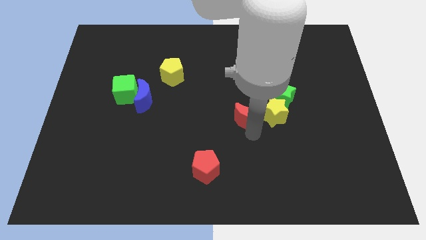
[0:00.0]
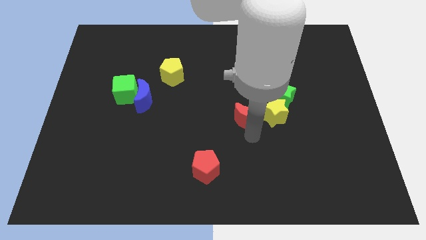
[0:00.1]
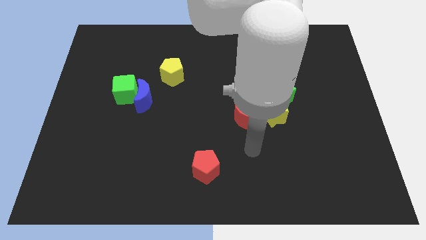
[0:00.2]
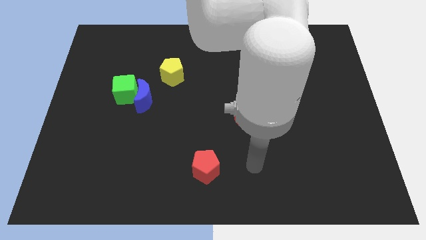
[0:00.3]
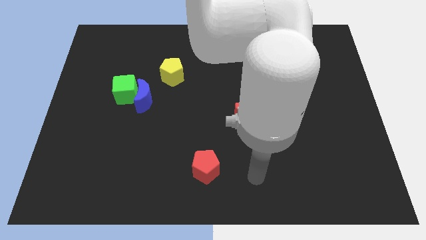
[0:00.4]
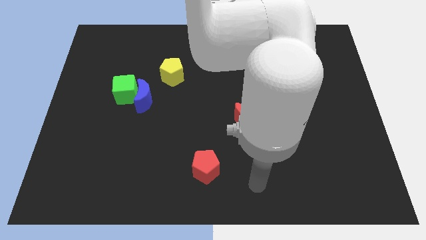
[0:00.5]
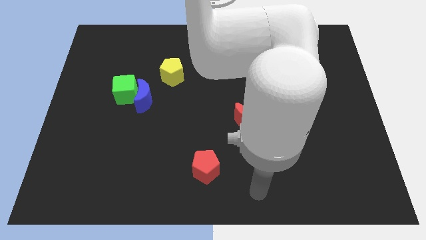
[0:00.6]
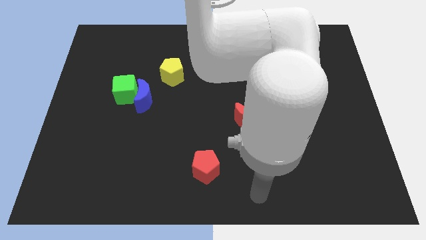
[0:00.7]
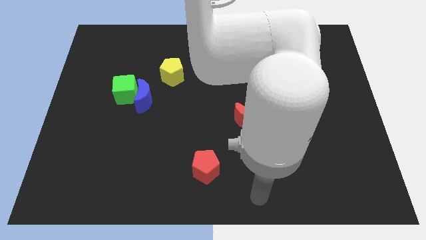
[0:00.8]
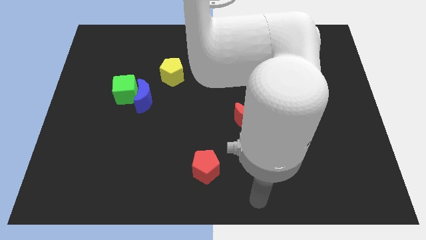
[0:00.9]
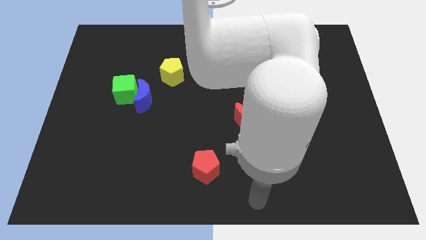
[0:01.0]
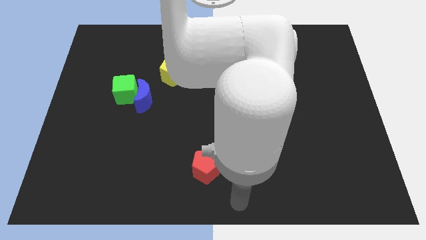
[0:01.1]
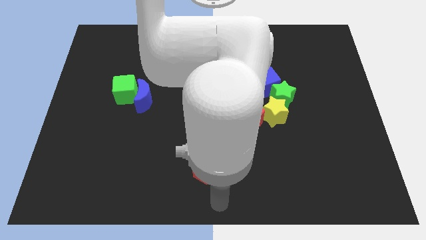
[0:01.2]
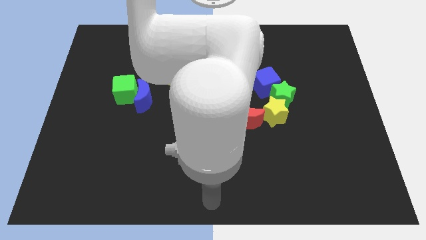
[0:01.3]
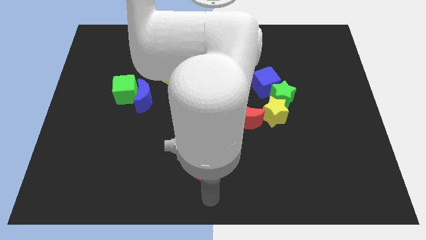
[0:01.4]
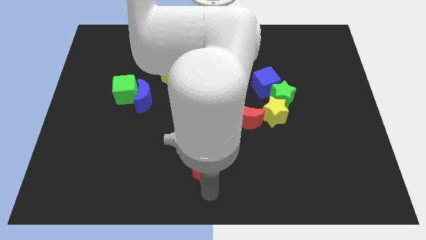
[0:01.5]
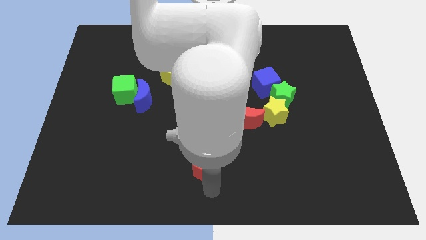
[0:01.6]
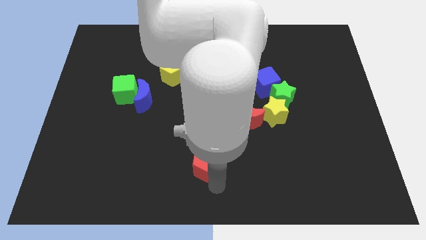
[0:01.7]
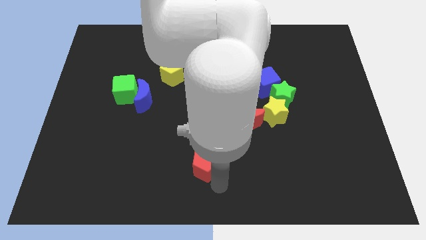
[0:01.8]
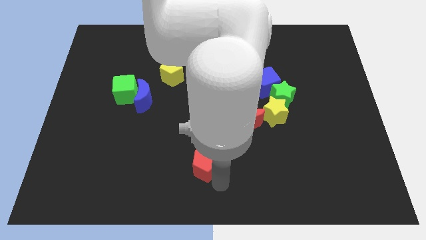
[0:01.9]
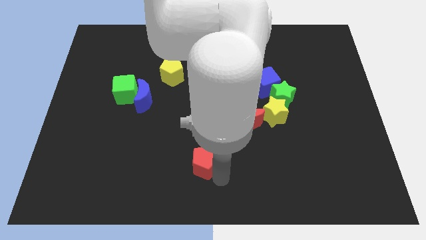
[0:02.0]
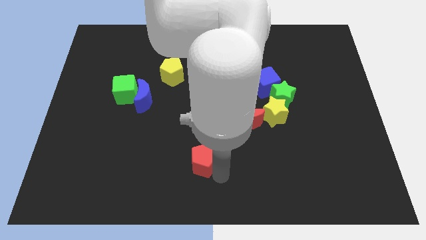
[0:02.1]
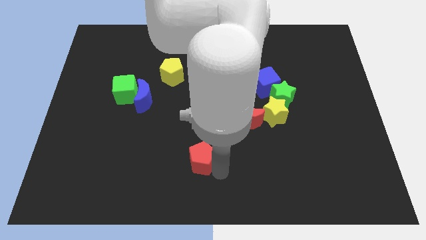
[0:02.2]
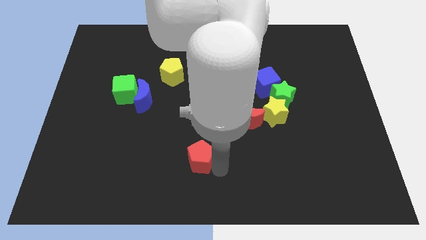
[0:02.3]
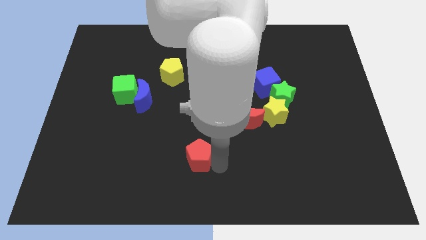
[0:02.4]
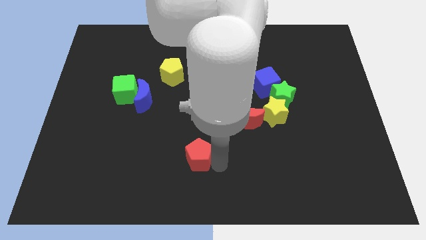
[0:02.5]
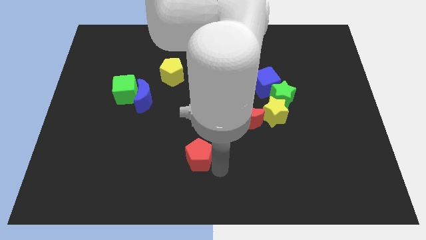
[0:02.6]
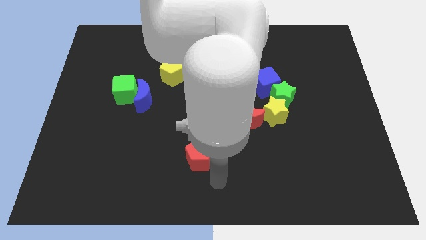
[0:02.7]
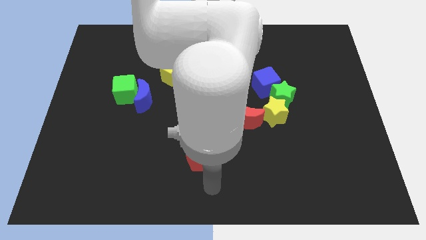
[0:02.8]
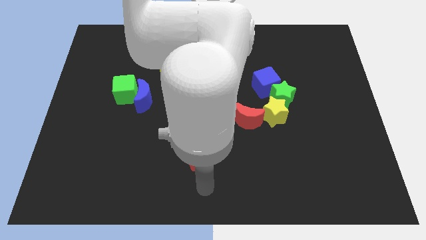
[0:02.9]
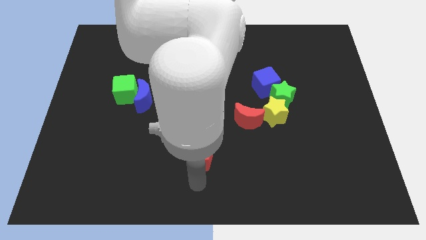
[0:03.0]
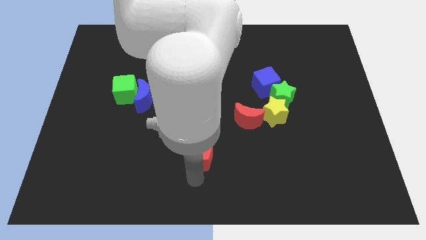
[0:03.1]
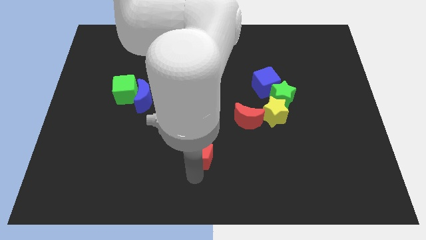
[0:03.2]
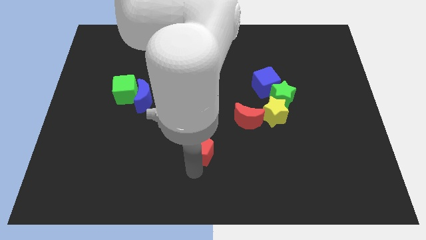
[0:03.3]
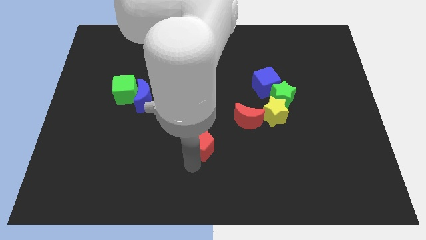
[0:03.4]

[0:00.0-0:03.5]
slide the red pentagon upwards

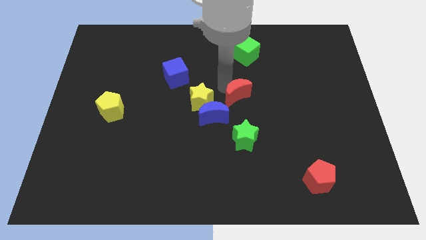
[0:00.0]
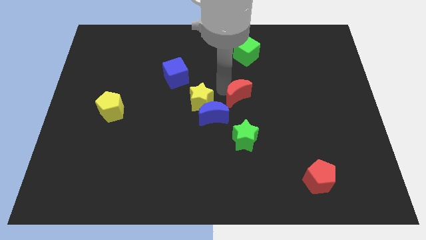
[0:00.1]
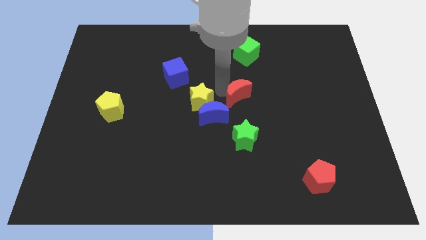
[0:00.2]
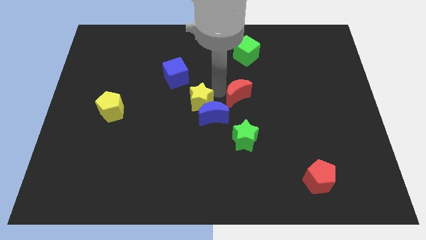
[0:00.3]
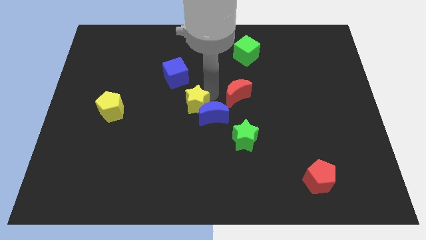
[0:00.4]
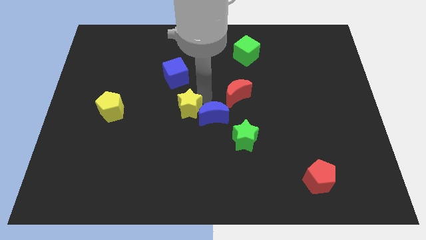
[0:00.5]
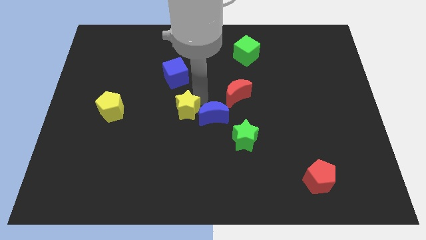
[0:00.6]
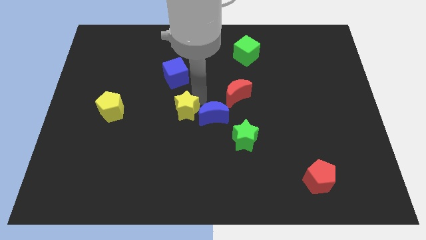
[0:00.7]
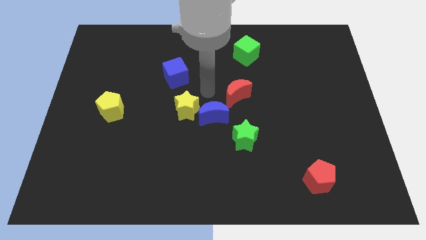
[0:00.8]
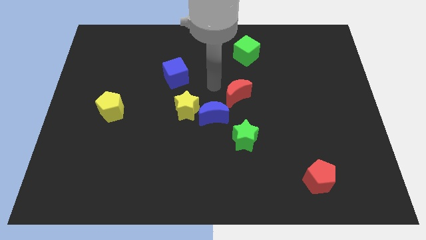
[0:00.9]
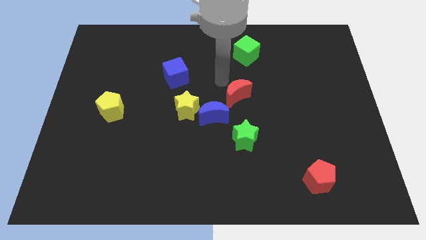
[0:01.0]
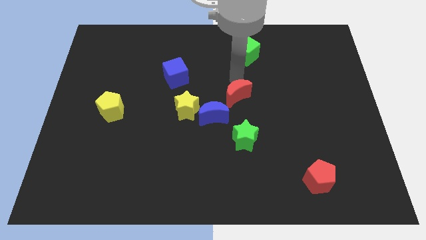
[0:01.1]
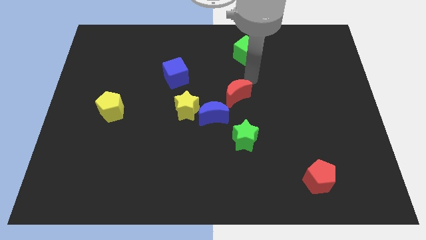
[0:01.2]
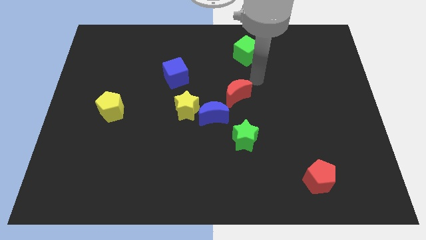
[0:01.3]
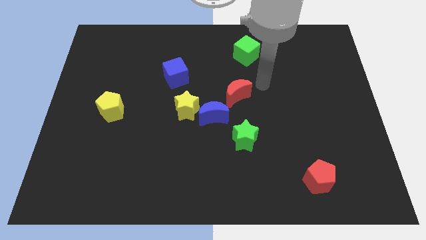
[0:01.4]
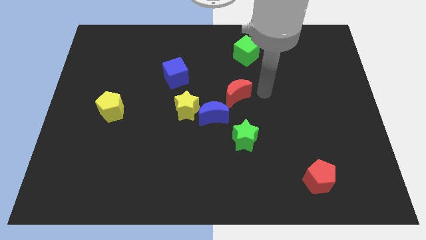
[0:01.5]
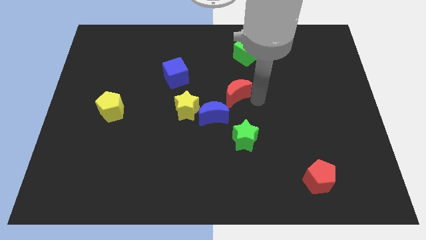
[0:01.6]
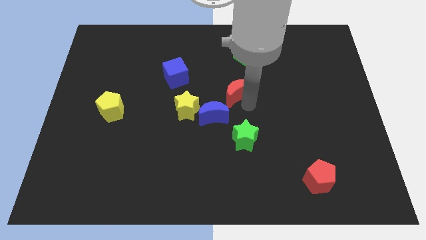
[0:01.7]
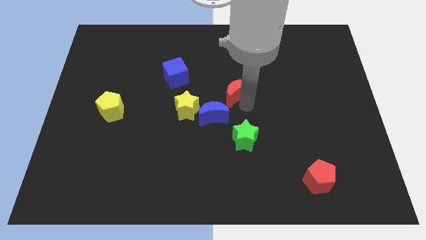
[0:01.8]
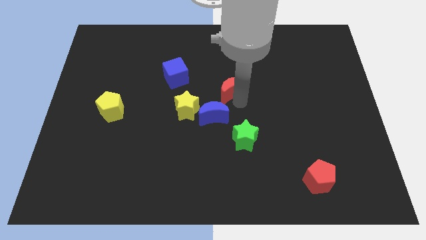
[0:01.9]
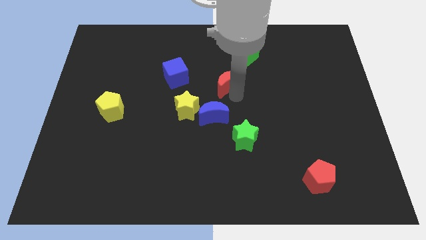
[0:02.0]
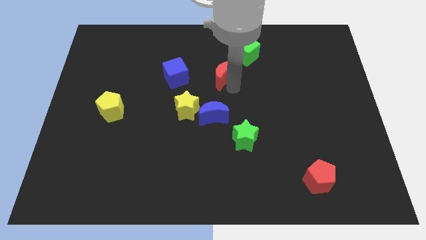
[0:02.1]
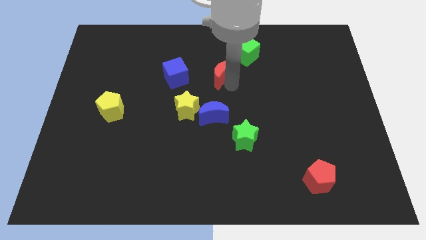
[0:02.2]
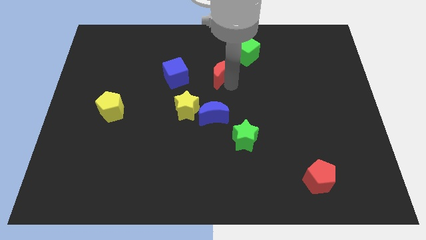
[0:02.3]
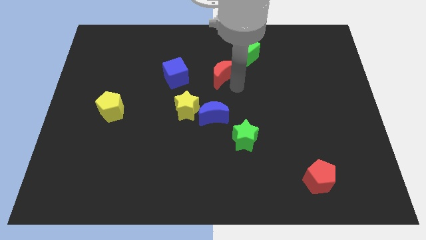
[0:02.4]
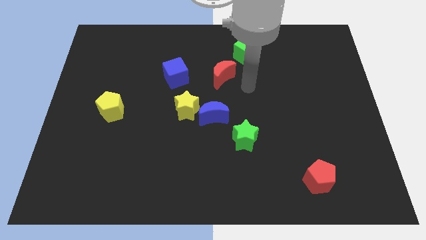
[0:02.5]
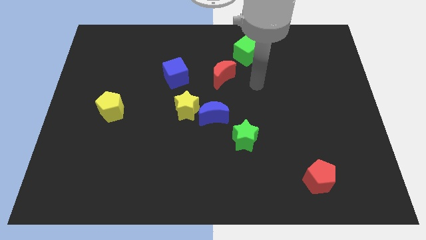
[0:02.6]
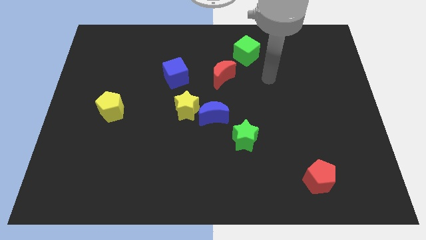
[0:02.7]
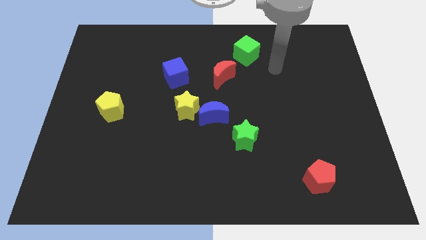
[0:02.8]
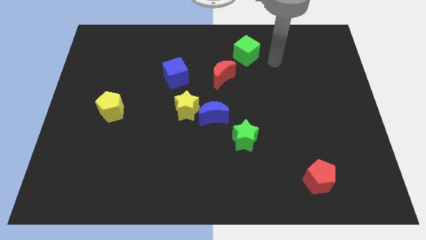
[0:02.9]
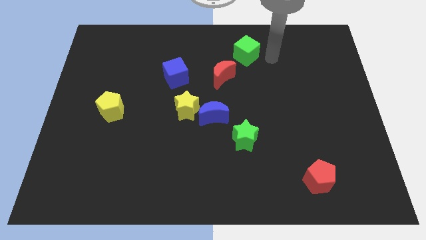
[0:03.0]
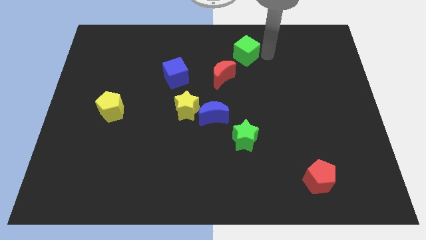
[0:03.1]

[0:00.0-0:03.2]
move the red moon above the blue moon

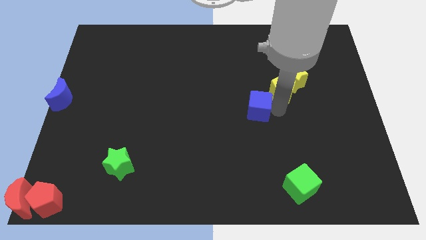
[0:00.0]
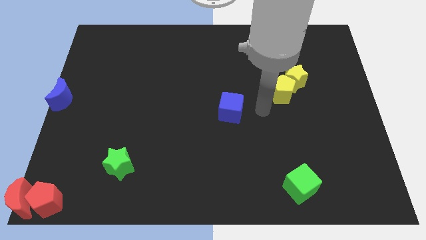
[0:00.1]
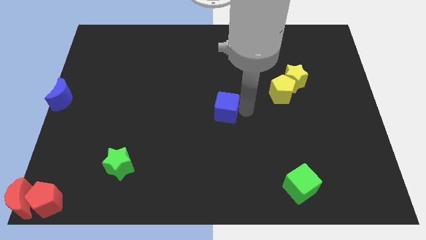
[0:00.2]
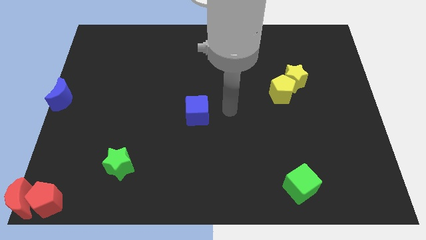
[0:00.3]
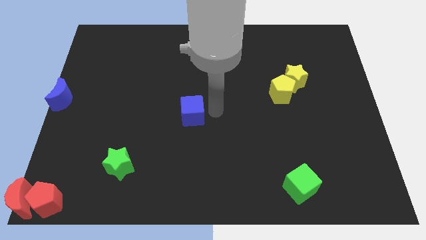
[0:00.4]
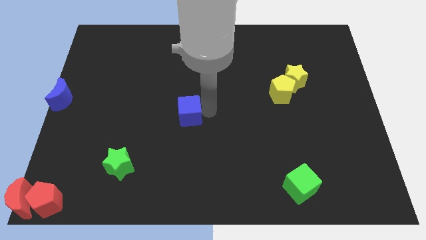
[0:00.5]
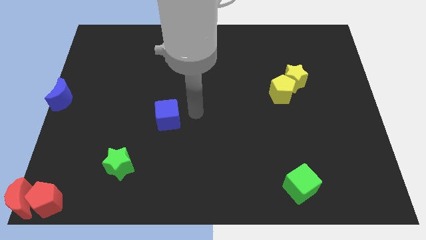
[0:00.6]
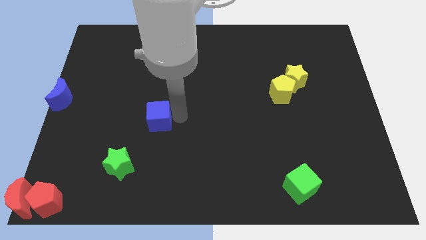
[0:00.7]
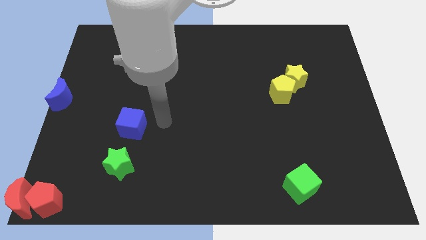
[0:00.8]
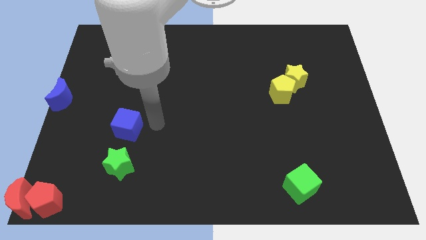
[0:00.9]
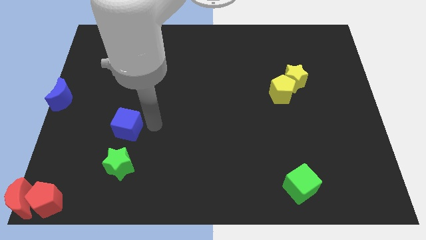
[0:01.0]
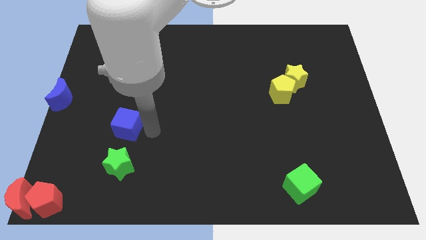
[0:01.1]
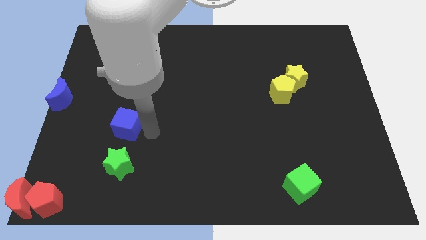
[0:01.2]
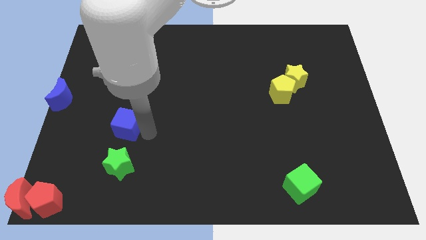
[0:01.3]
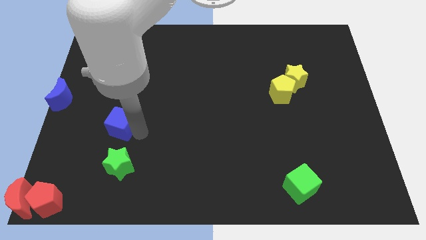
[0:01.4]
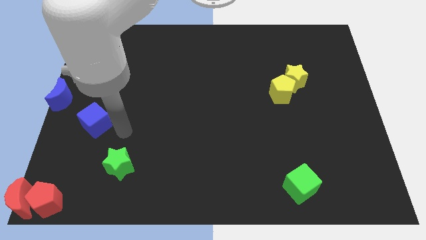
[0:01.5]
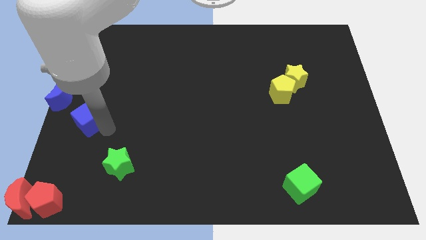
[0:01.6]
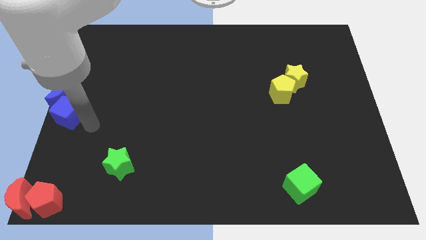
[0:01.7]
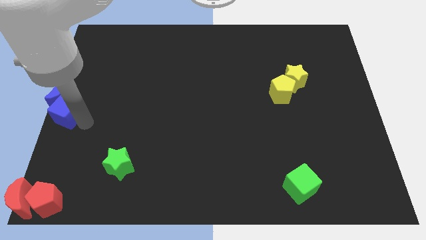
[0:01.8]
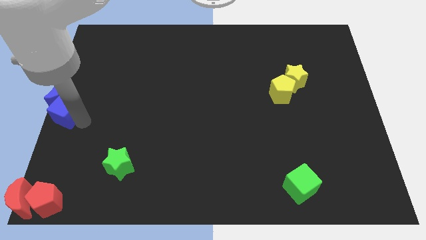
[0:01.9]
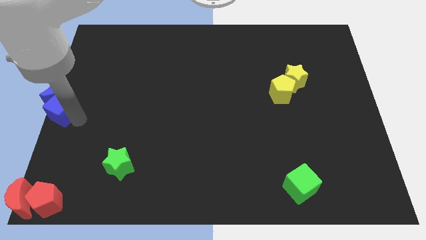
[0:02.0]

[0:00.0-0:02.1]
move blue cube into the blue crescent to the left center

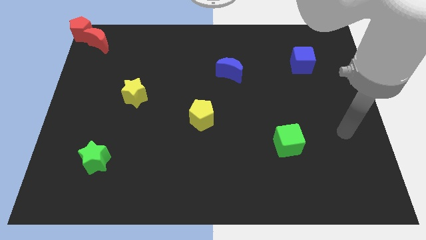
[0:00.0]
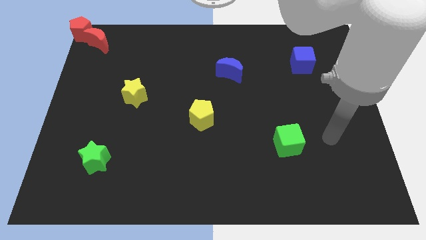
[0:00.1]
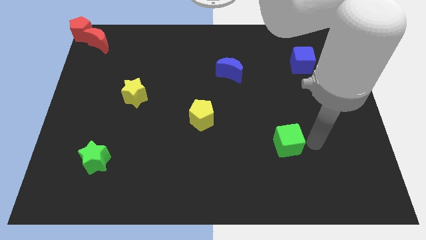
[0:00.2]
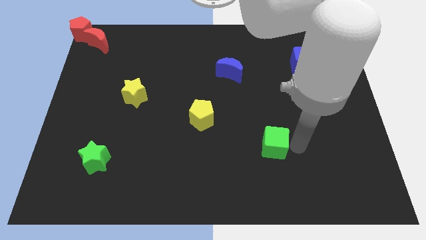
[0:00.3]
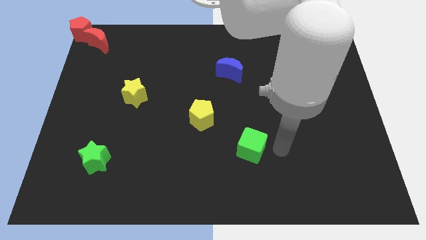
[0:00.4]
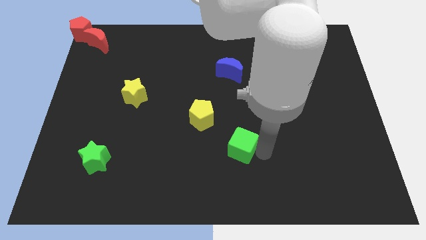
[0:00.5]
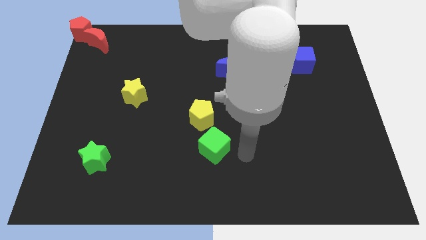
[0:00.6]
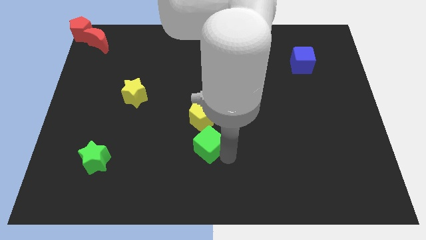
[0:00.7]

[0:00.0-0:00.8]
move the green cube below the yellow pentagon
